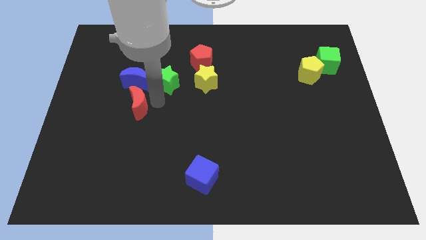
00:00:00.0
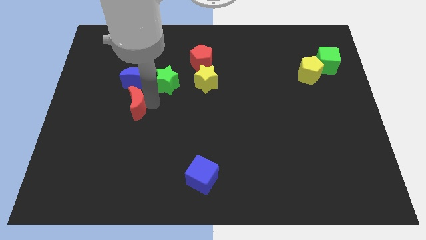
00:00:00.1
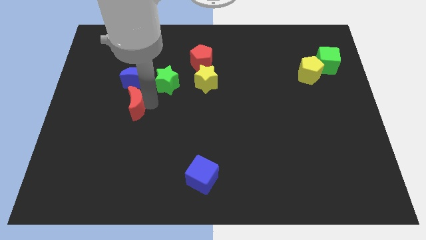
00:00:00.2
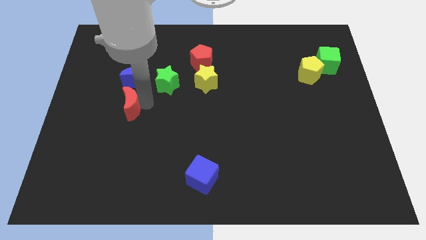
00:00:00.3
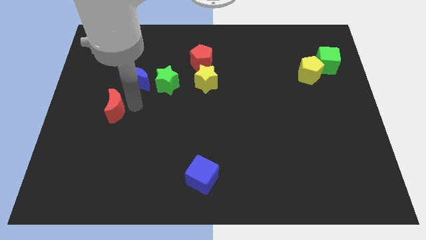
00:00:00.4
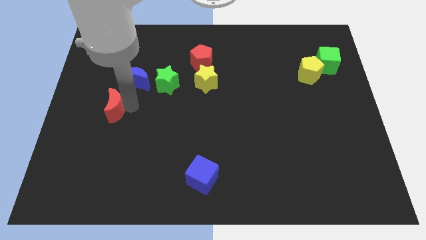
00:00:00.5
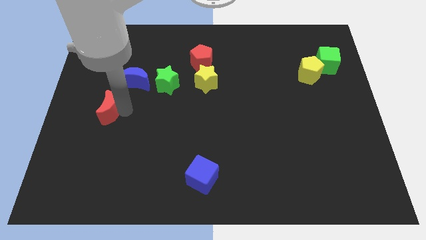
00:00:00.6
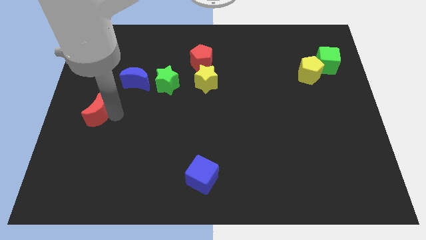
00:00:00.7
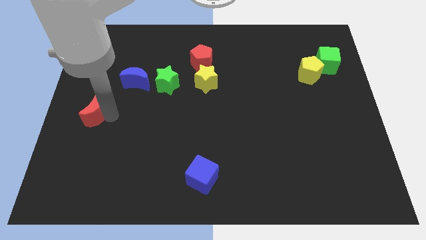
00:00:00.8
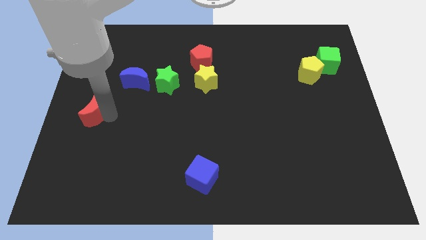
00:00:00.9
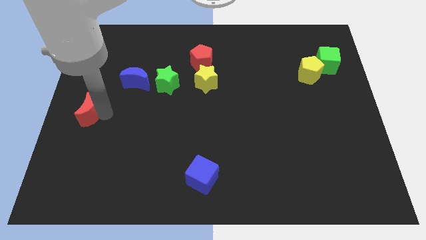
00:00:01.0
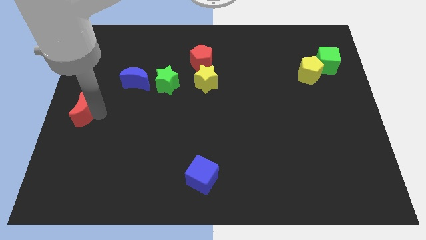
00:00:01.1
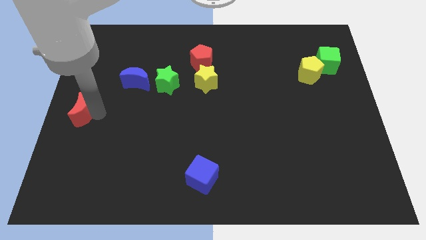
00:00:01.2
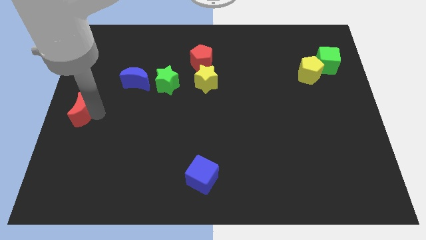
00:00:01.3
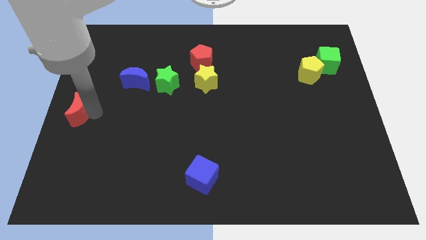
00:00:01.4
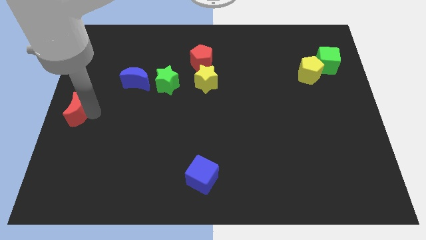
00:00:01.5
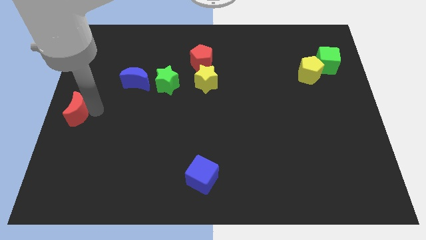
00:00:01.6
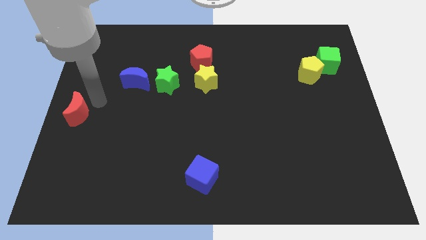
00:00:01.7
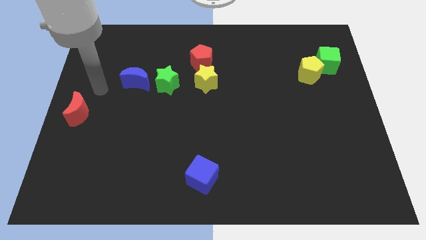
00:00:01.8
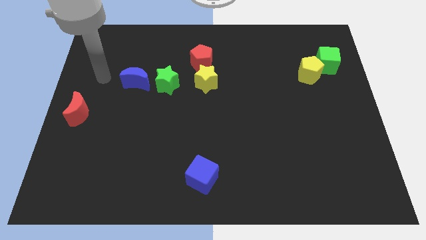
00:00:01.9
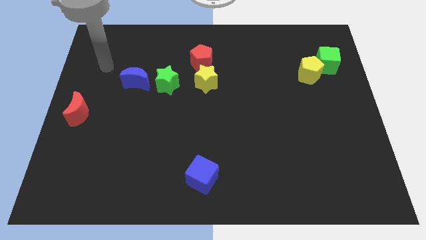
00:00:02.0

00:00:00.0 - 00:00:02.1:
slide red moon to the center left

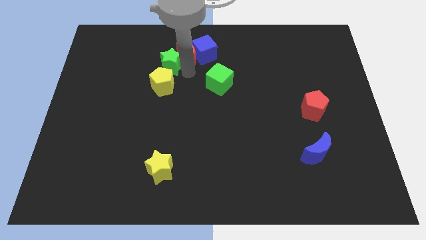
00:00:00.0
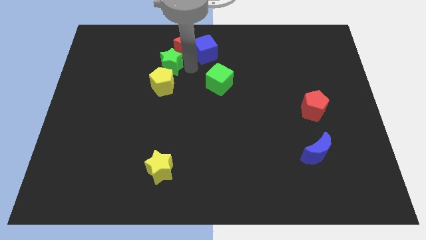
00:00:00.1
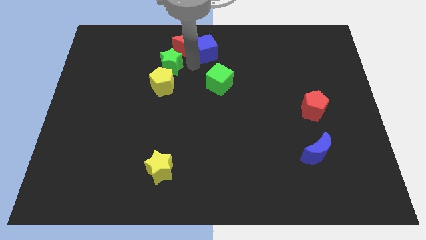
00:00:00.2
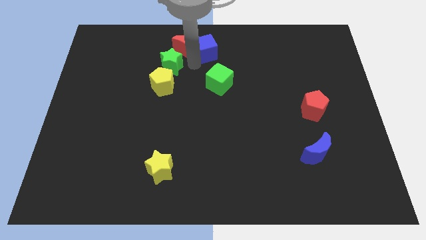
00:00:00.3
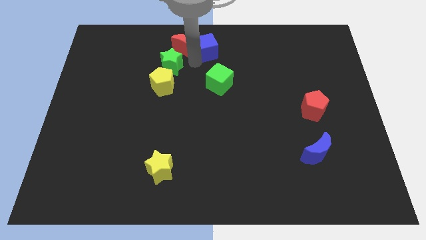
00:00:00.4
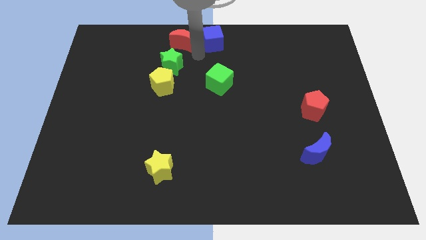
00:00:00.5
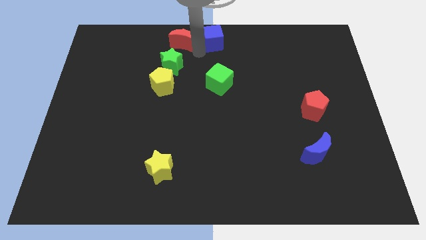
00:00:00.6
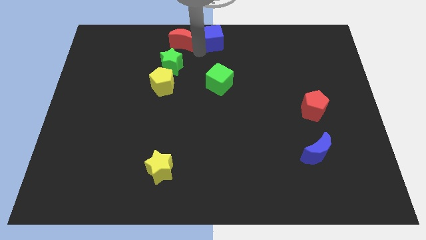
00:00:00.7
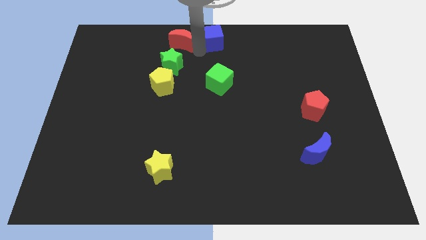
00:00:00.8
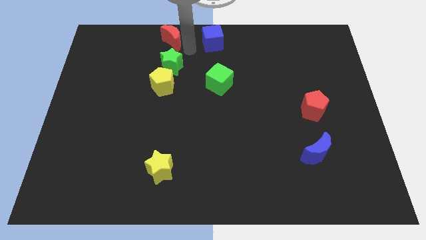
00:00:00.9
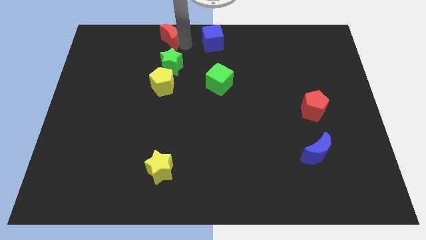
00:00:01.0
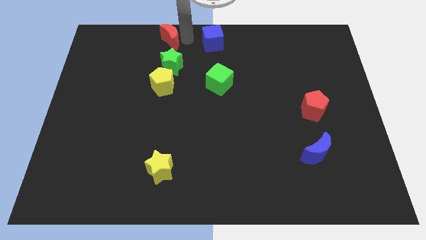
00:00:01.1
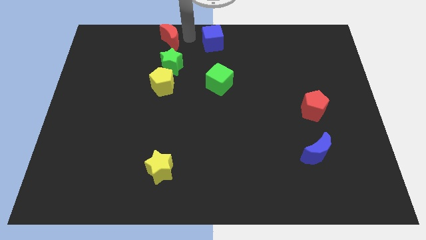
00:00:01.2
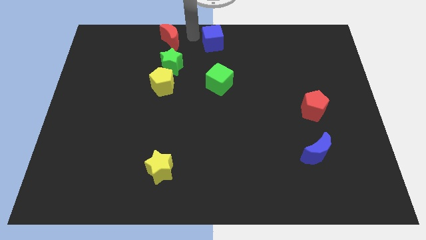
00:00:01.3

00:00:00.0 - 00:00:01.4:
push the red crescent to the top side of the green star

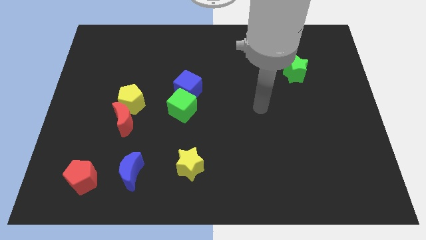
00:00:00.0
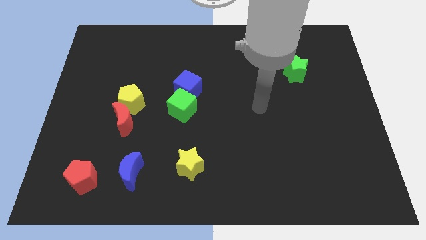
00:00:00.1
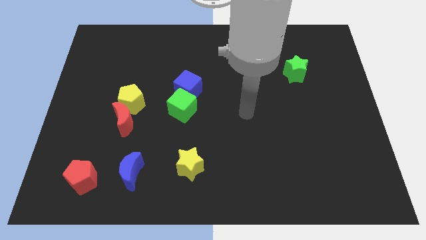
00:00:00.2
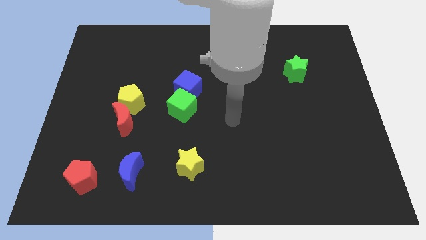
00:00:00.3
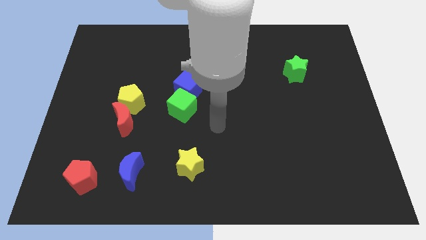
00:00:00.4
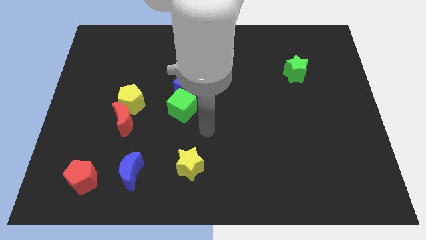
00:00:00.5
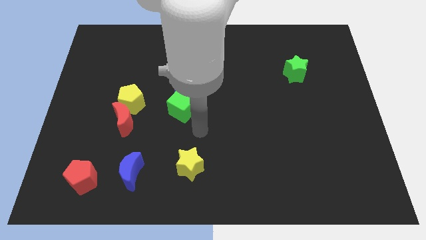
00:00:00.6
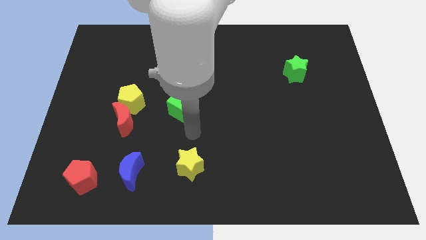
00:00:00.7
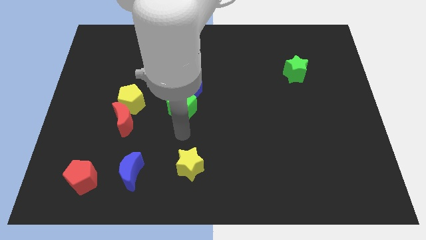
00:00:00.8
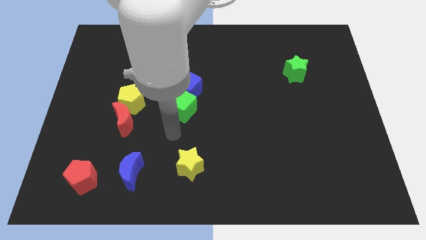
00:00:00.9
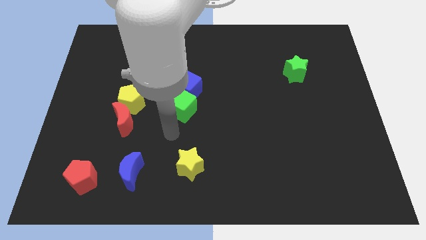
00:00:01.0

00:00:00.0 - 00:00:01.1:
place your arm to the bottom of the green cube

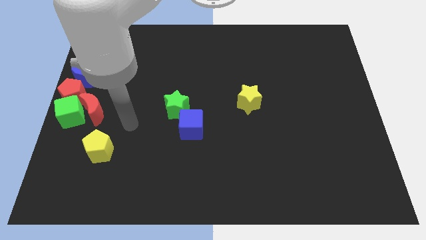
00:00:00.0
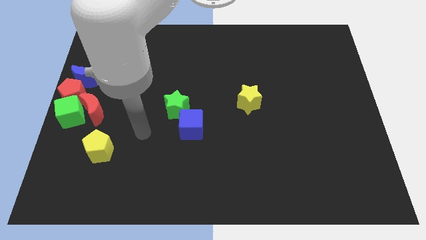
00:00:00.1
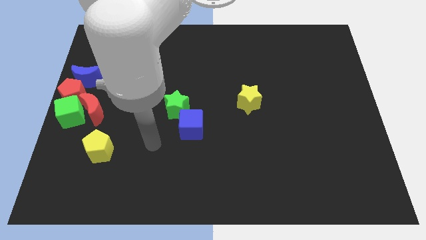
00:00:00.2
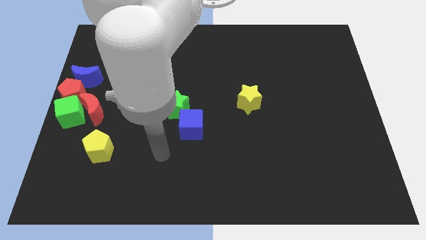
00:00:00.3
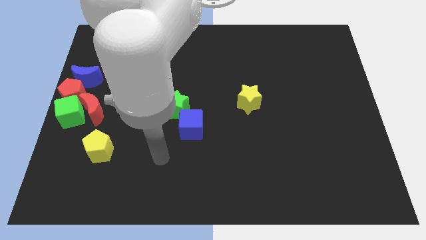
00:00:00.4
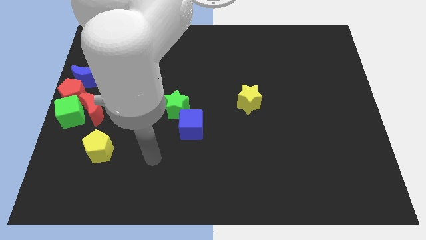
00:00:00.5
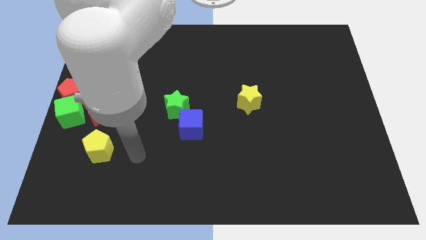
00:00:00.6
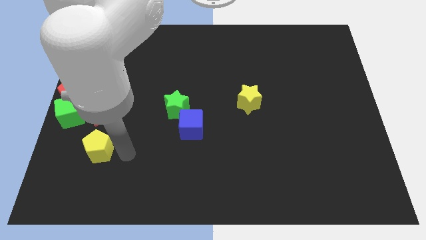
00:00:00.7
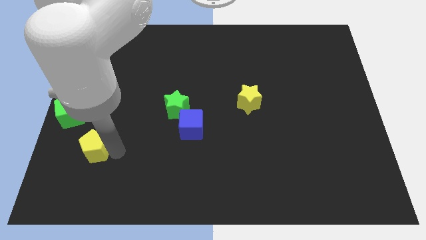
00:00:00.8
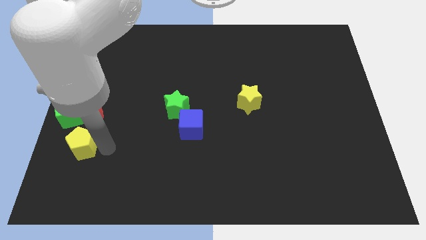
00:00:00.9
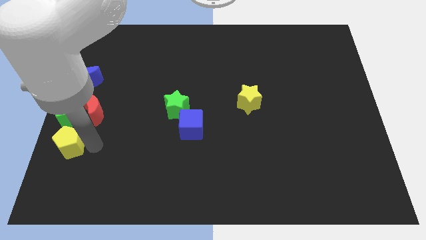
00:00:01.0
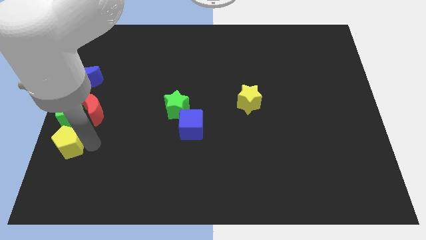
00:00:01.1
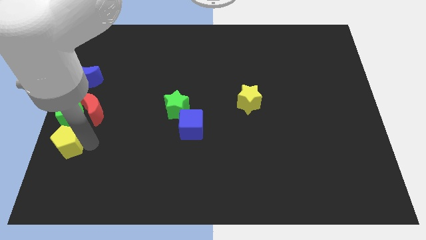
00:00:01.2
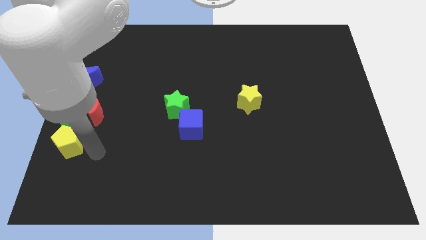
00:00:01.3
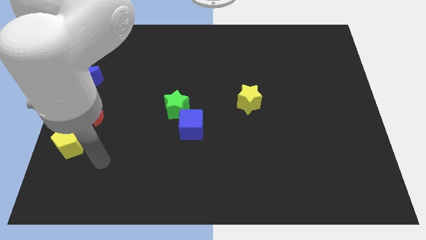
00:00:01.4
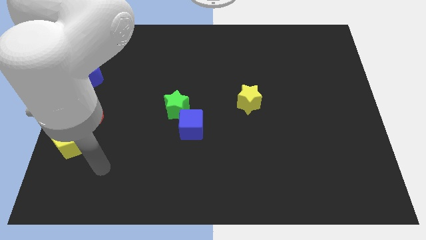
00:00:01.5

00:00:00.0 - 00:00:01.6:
place the yellow pentagon down to the green cube

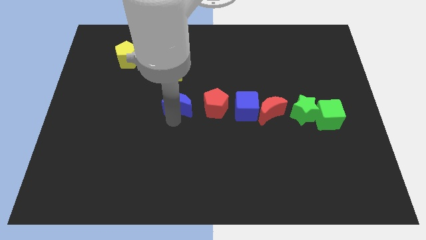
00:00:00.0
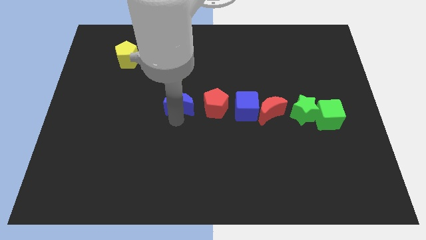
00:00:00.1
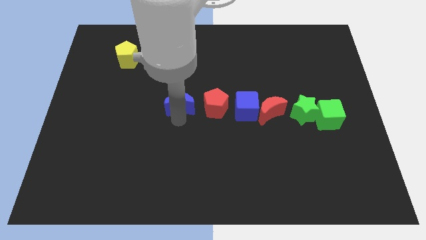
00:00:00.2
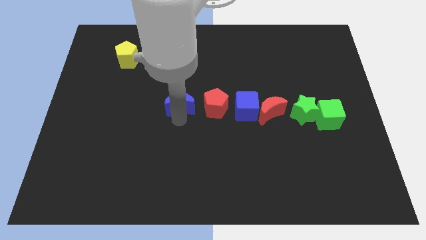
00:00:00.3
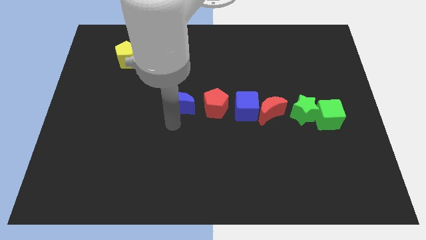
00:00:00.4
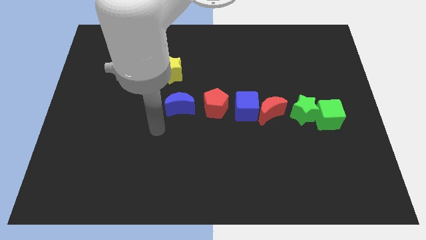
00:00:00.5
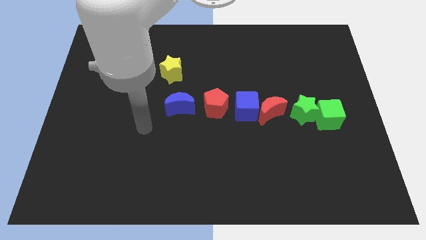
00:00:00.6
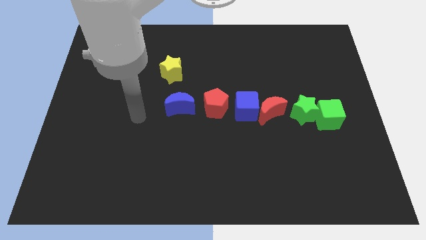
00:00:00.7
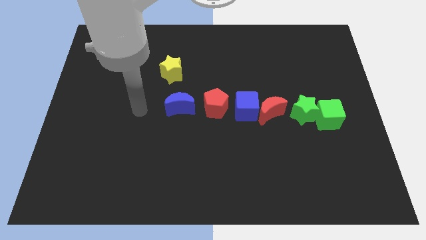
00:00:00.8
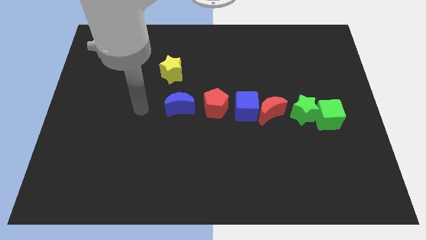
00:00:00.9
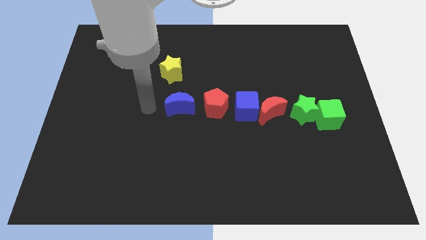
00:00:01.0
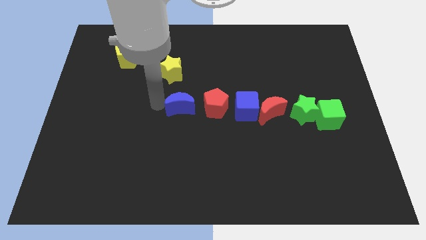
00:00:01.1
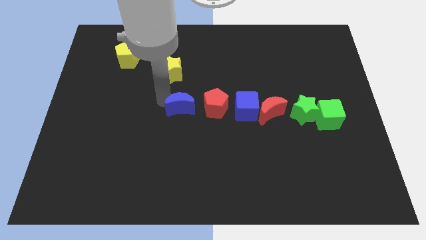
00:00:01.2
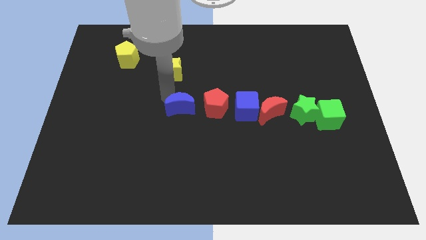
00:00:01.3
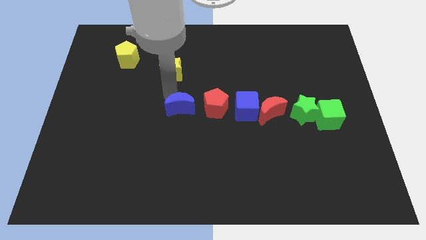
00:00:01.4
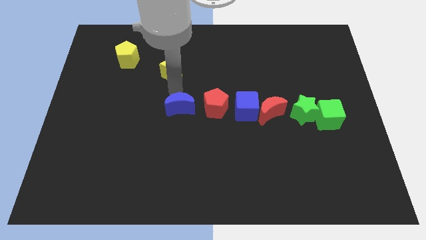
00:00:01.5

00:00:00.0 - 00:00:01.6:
place your arm in between the yellow star and blue moon

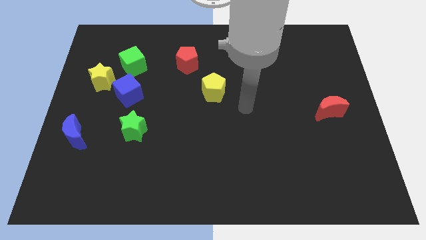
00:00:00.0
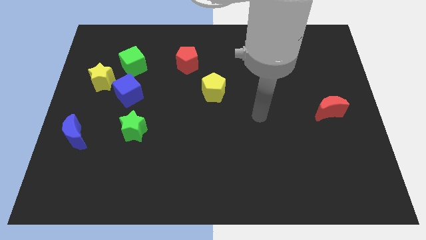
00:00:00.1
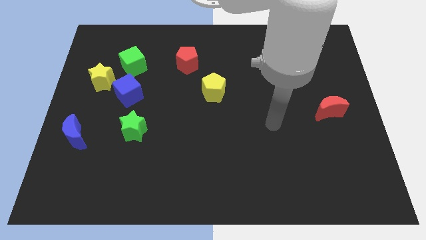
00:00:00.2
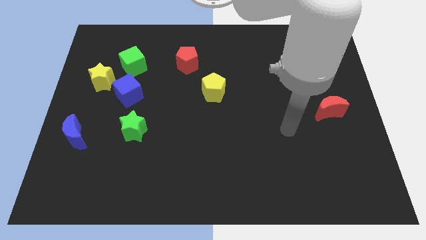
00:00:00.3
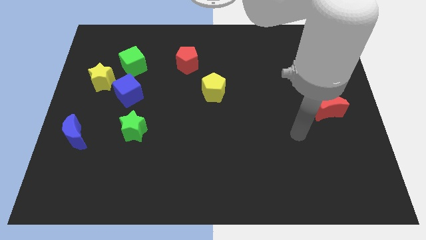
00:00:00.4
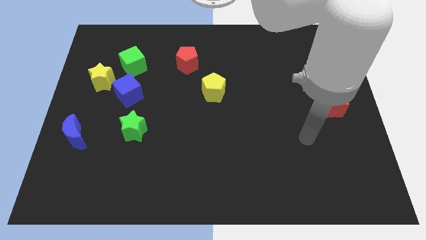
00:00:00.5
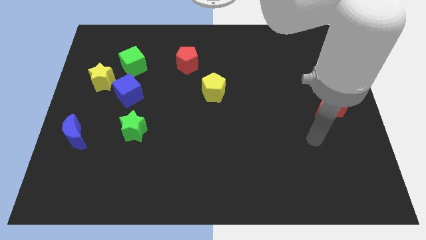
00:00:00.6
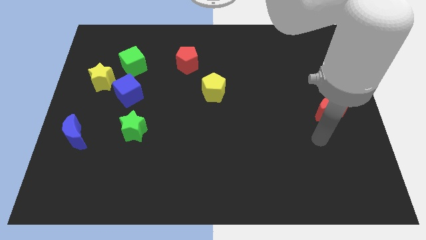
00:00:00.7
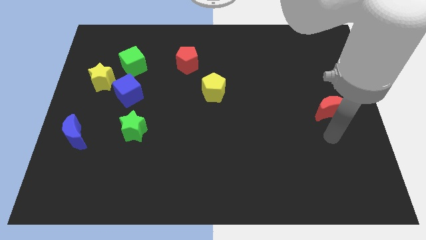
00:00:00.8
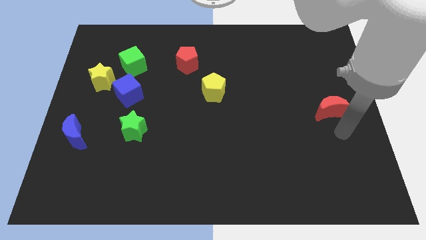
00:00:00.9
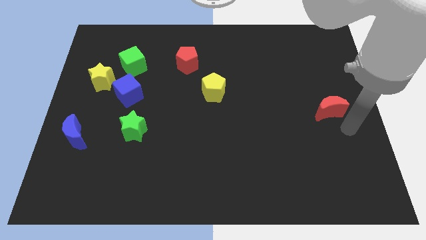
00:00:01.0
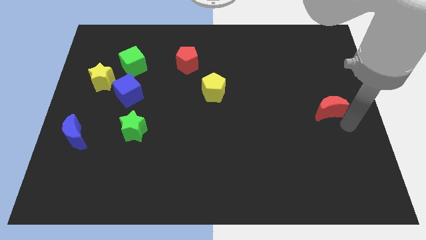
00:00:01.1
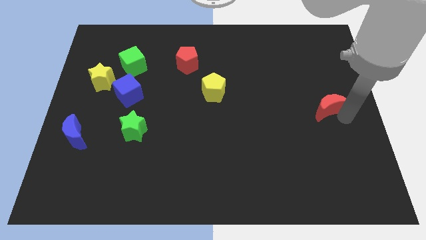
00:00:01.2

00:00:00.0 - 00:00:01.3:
move the arm towards red crescent
